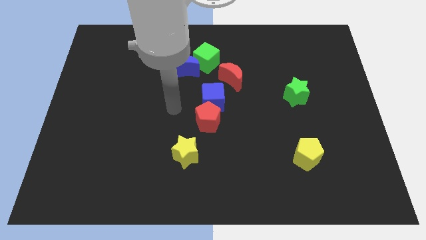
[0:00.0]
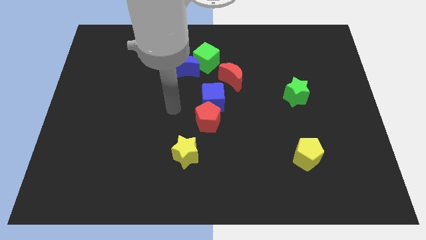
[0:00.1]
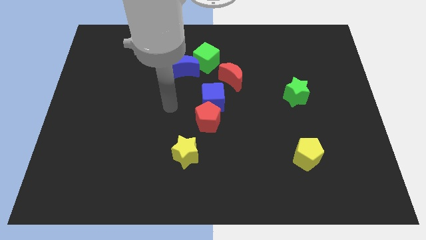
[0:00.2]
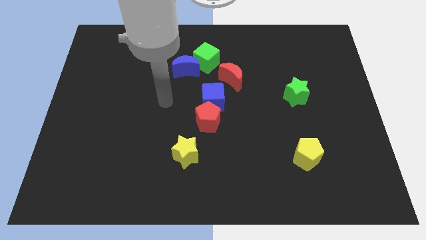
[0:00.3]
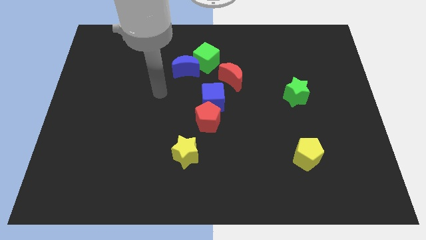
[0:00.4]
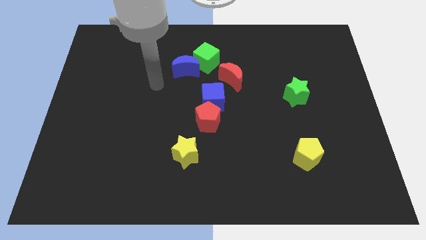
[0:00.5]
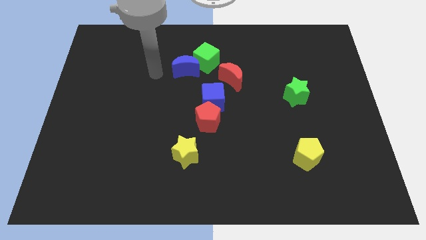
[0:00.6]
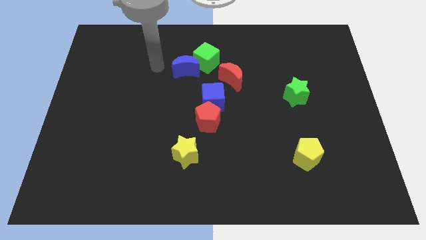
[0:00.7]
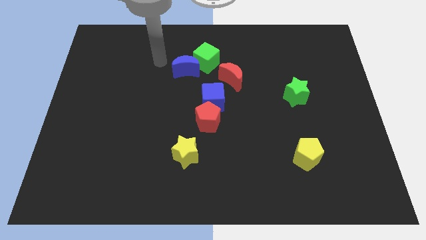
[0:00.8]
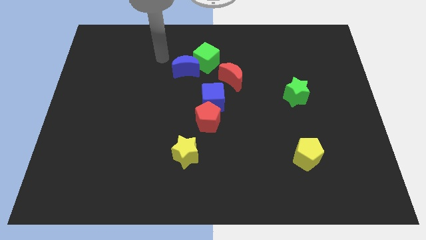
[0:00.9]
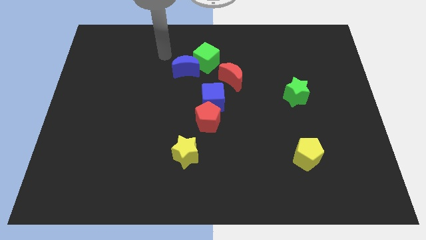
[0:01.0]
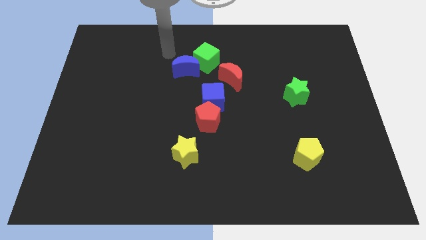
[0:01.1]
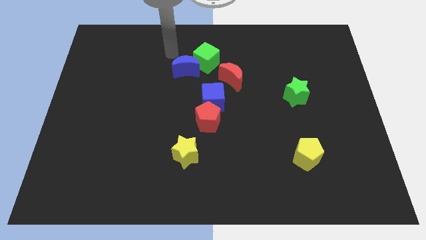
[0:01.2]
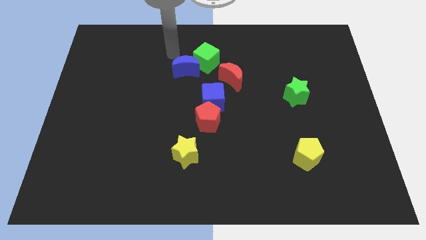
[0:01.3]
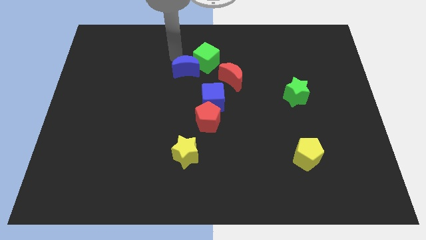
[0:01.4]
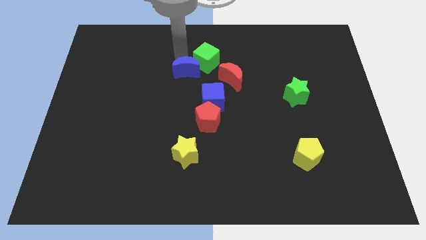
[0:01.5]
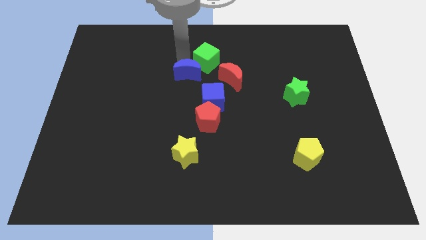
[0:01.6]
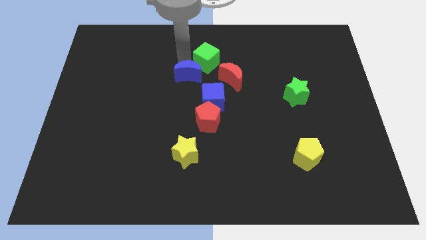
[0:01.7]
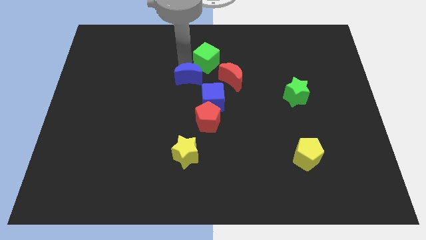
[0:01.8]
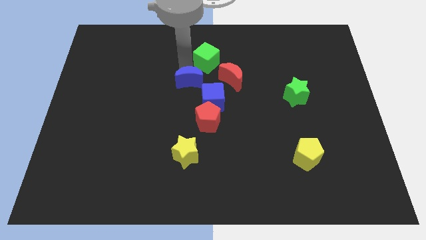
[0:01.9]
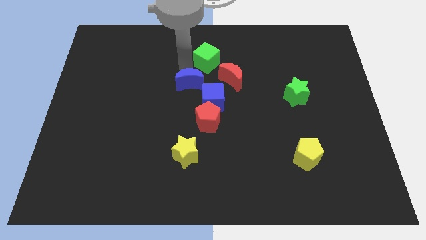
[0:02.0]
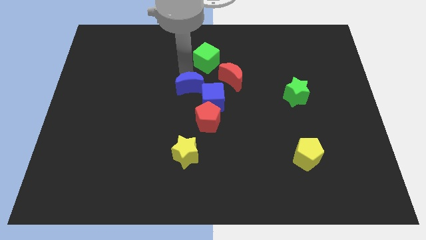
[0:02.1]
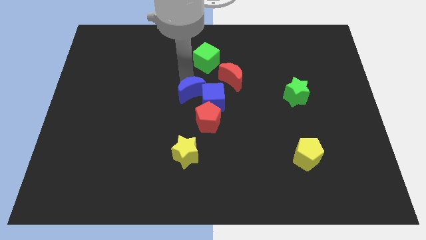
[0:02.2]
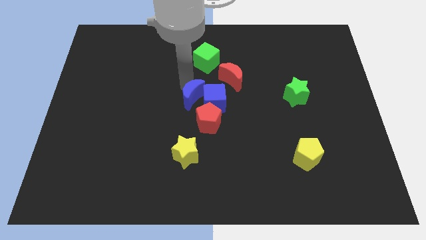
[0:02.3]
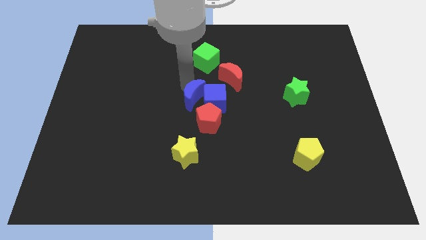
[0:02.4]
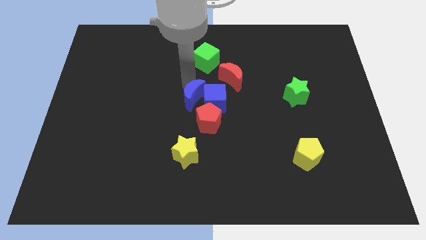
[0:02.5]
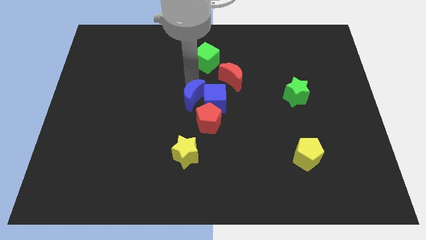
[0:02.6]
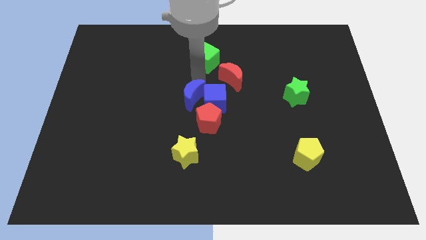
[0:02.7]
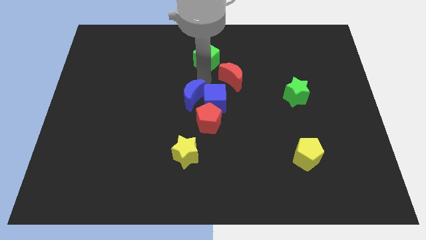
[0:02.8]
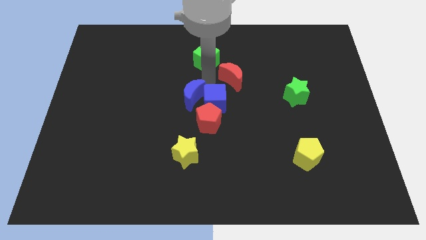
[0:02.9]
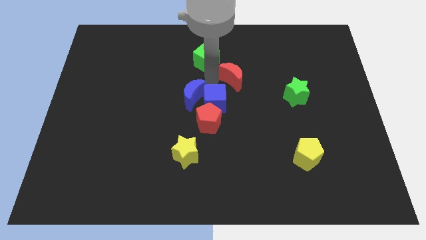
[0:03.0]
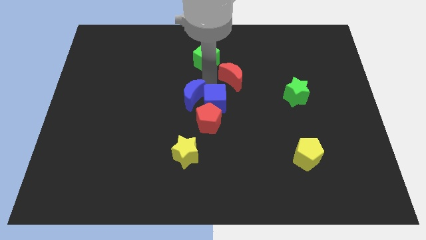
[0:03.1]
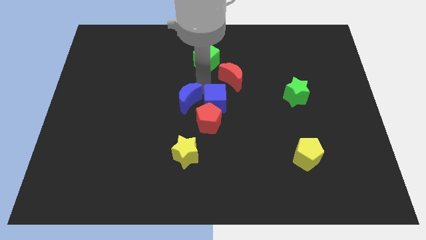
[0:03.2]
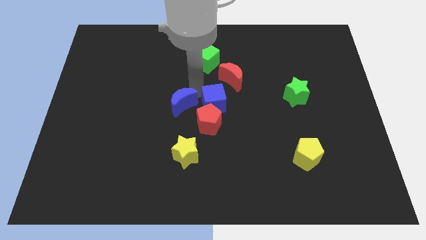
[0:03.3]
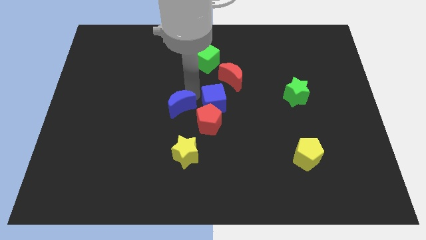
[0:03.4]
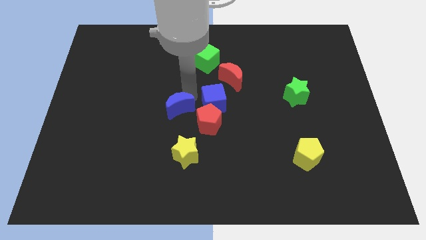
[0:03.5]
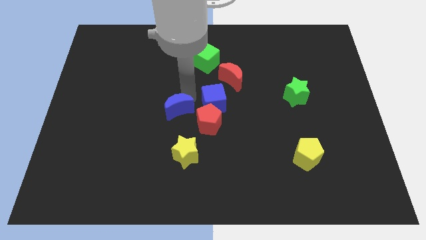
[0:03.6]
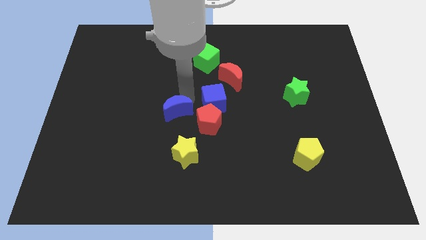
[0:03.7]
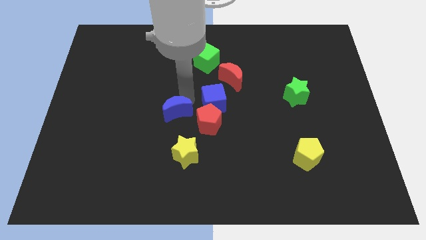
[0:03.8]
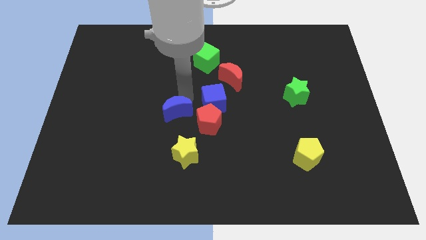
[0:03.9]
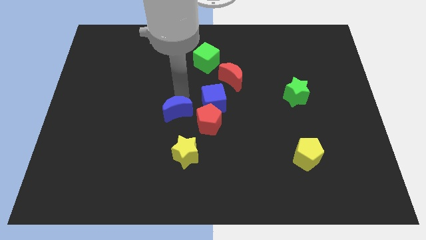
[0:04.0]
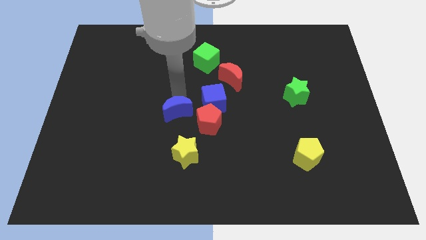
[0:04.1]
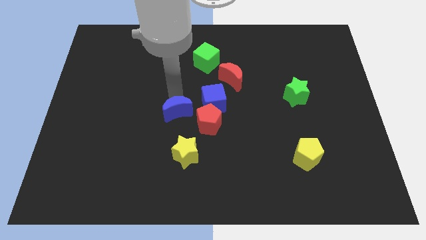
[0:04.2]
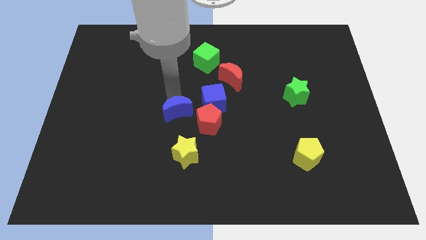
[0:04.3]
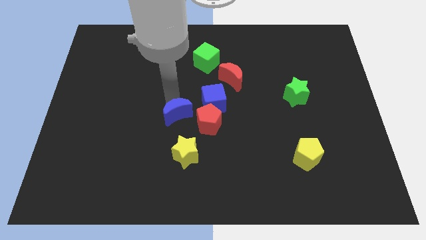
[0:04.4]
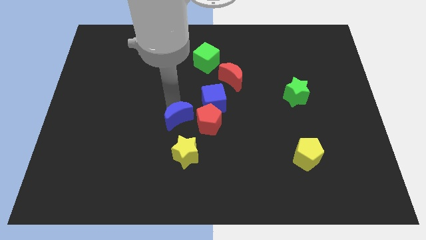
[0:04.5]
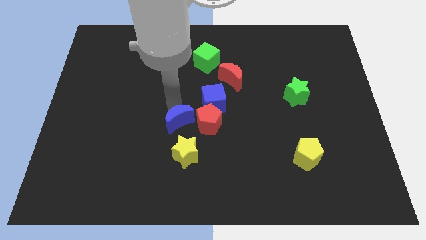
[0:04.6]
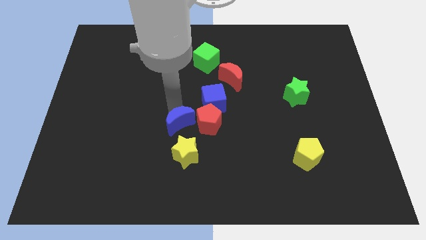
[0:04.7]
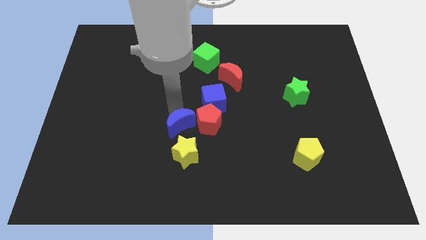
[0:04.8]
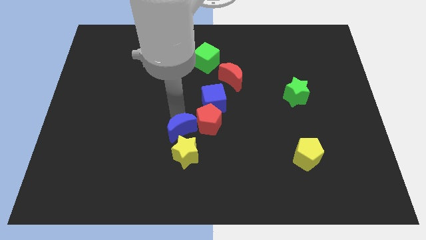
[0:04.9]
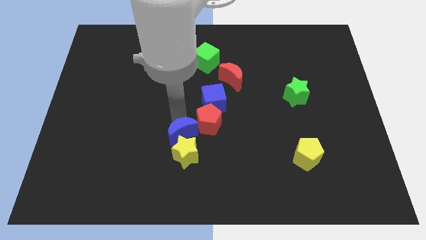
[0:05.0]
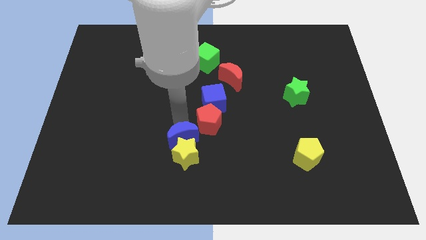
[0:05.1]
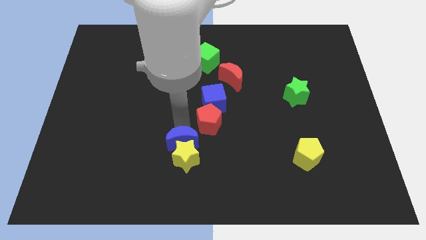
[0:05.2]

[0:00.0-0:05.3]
put the blue moon towards the yellow star

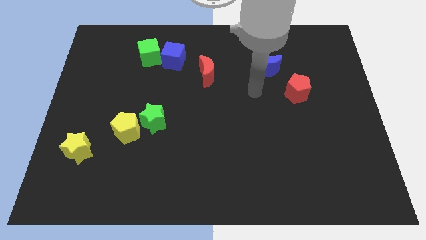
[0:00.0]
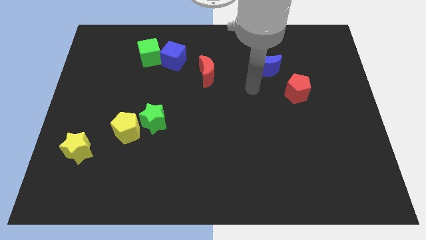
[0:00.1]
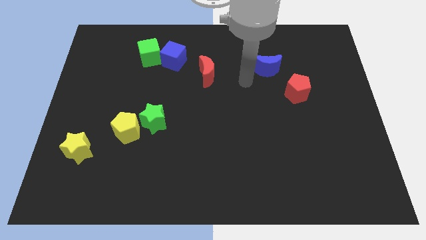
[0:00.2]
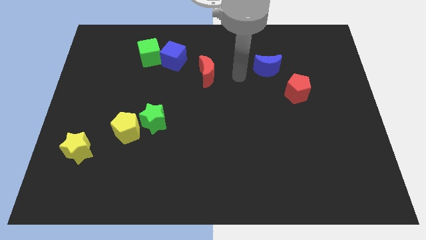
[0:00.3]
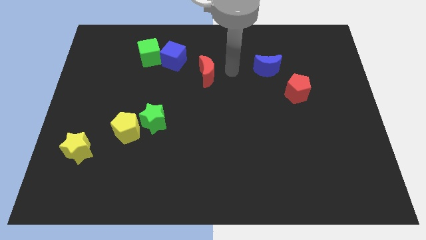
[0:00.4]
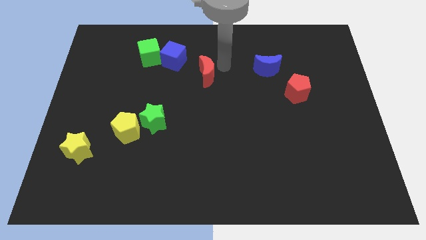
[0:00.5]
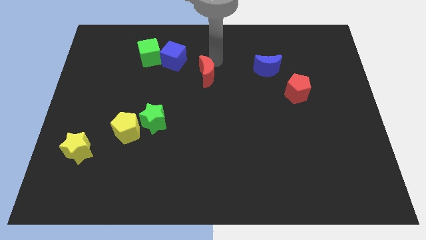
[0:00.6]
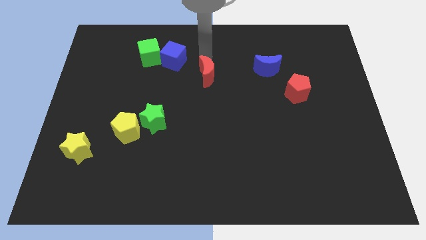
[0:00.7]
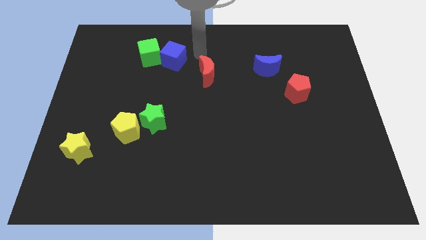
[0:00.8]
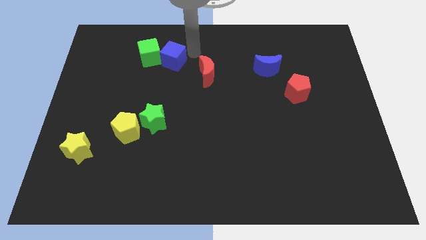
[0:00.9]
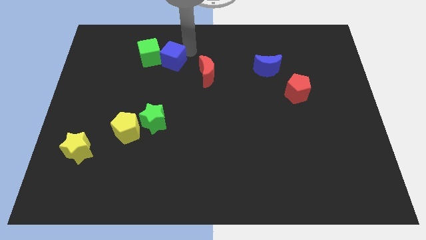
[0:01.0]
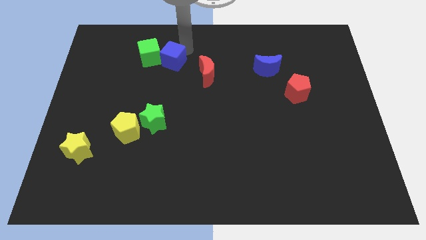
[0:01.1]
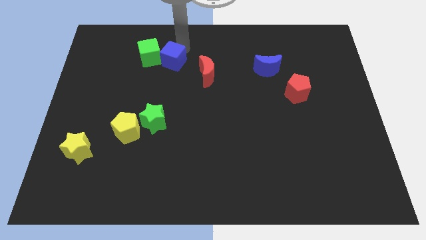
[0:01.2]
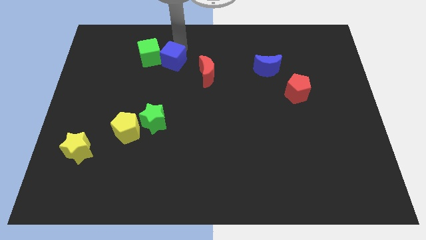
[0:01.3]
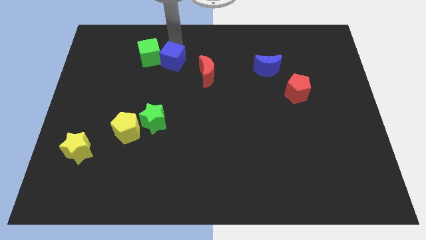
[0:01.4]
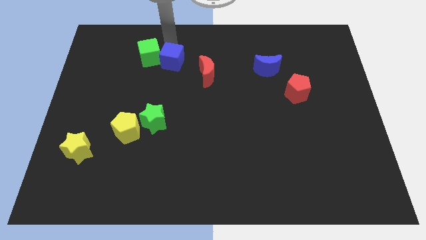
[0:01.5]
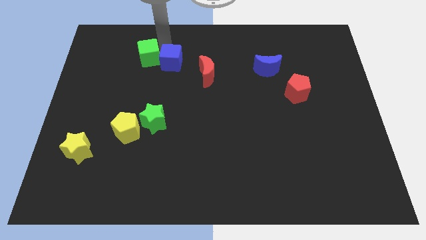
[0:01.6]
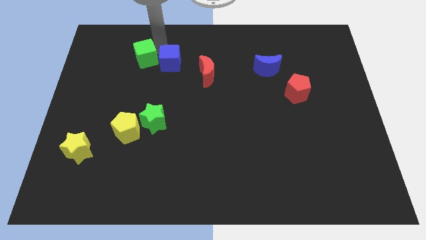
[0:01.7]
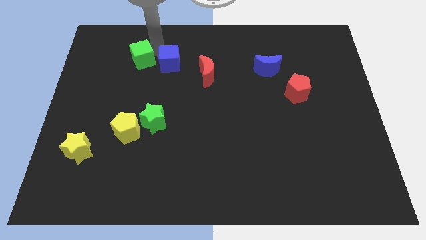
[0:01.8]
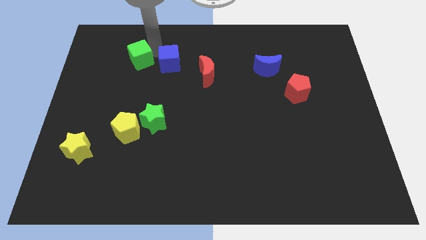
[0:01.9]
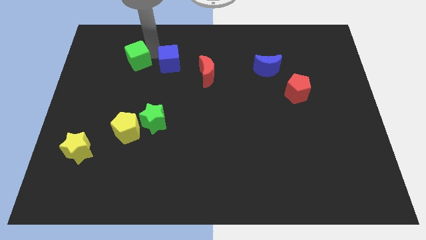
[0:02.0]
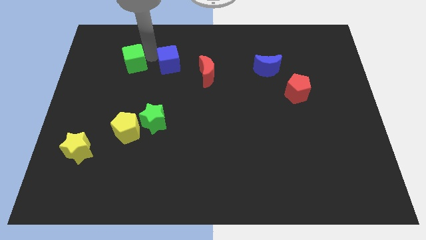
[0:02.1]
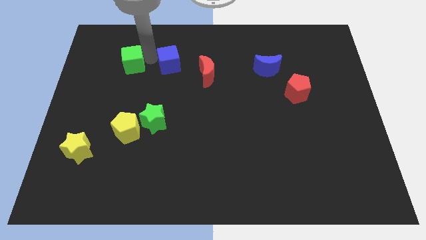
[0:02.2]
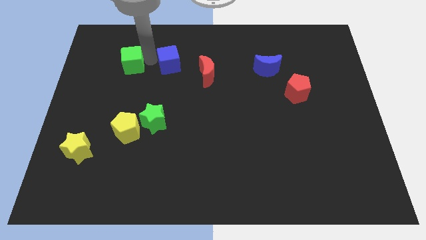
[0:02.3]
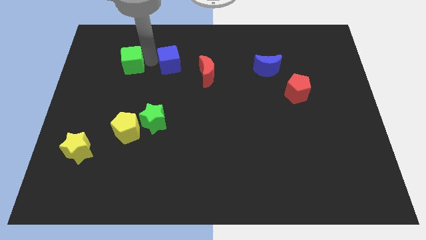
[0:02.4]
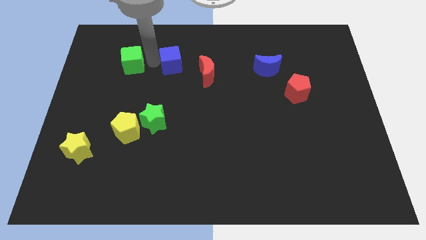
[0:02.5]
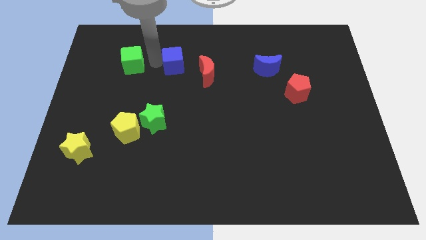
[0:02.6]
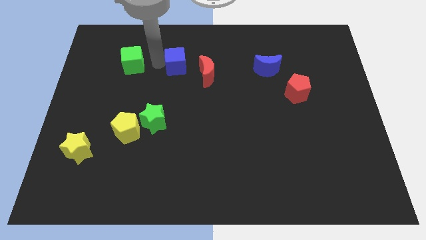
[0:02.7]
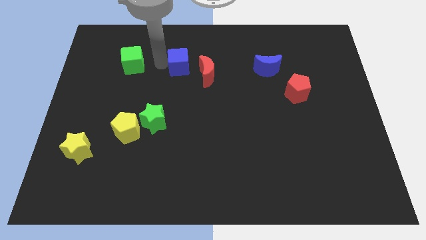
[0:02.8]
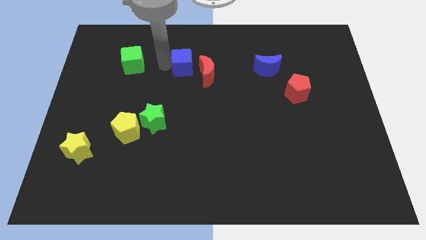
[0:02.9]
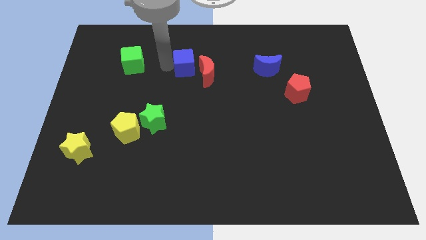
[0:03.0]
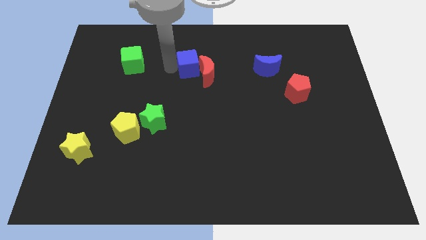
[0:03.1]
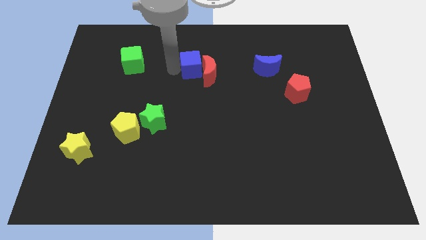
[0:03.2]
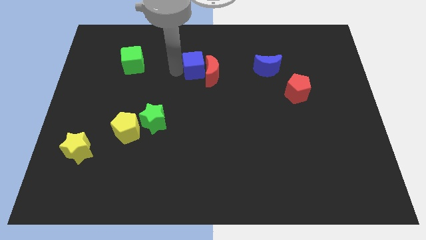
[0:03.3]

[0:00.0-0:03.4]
put the blue cube to the red moon
